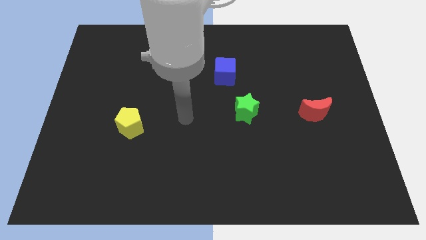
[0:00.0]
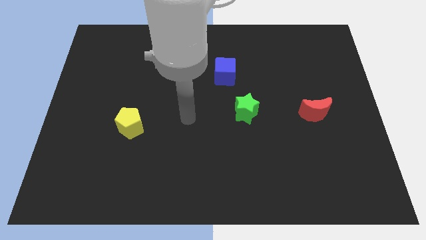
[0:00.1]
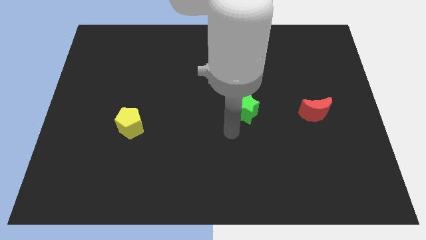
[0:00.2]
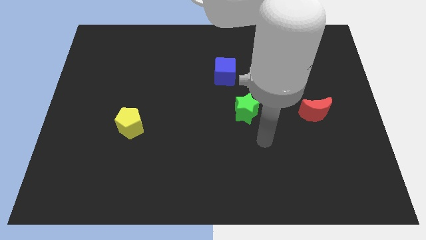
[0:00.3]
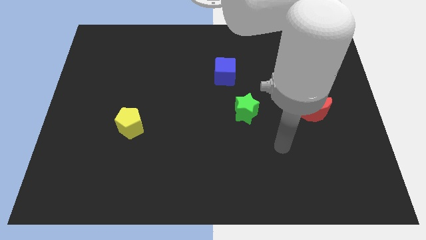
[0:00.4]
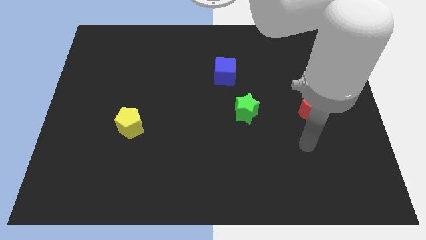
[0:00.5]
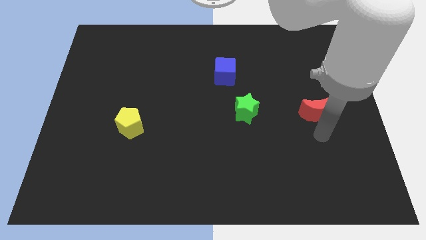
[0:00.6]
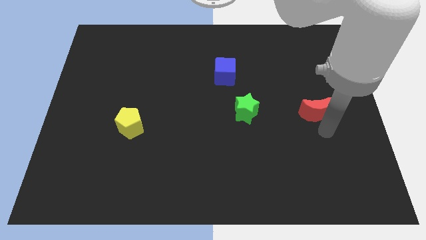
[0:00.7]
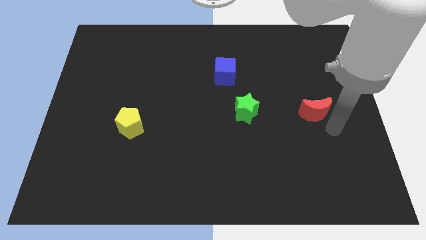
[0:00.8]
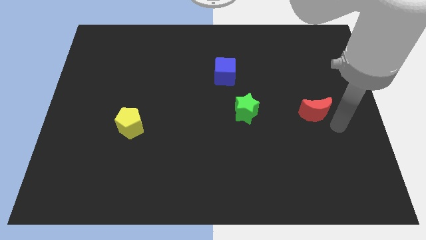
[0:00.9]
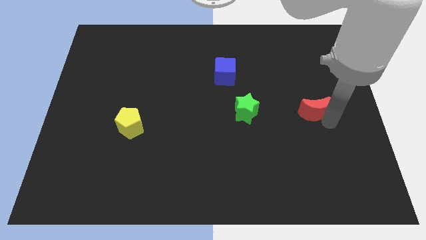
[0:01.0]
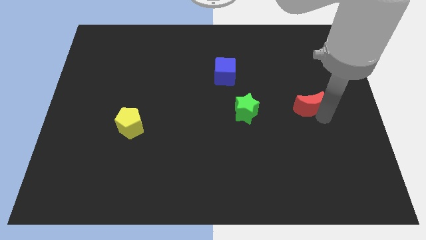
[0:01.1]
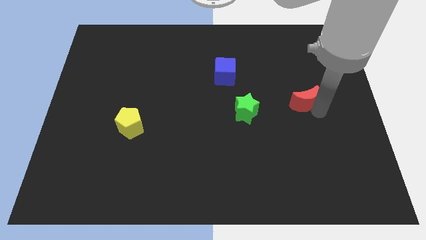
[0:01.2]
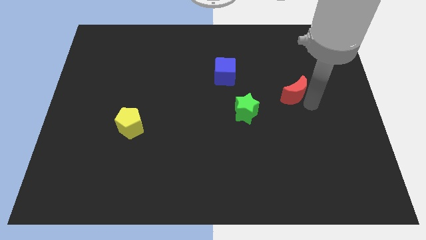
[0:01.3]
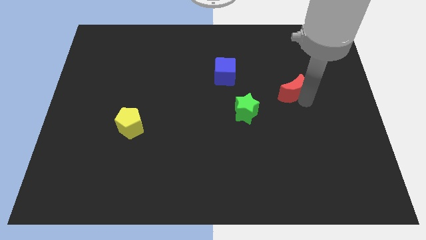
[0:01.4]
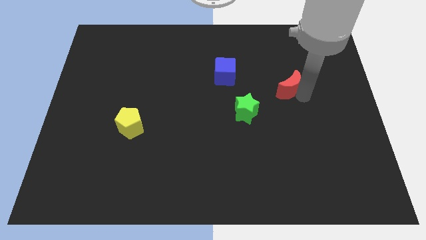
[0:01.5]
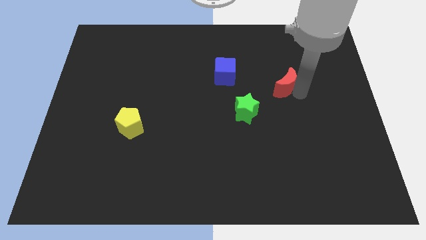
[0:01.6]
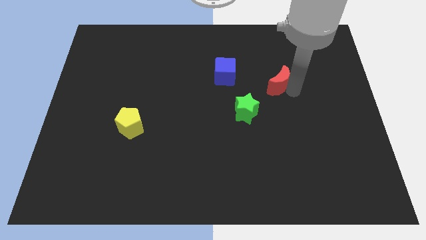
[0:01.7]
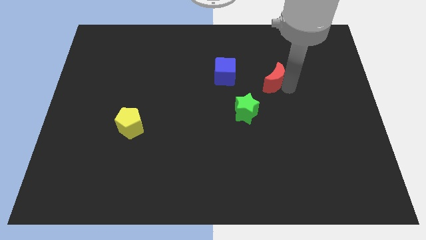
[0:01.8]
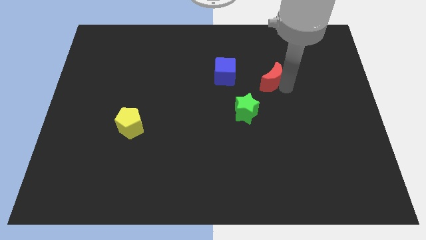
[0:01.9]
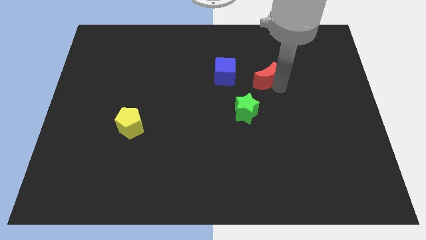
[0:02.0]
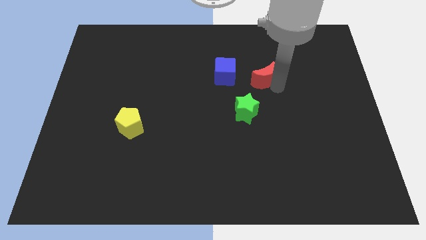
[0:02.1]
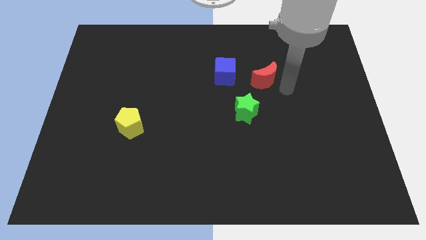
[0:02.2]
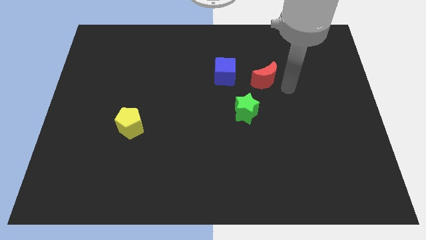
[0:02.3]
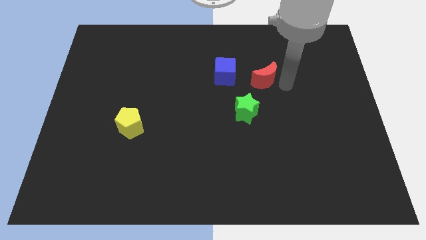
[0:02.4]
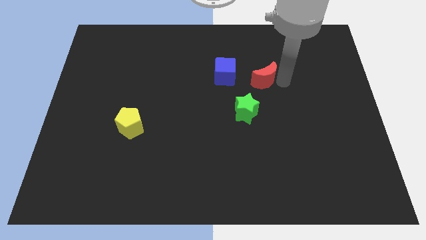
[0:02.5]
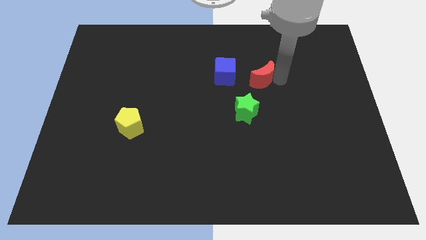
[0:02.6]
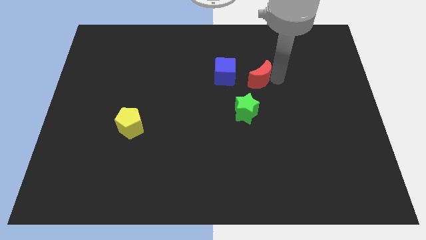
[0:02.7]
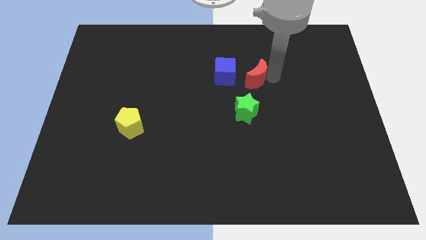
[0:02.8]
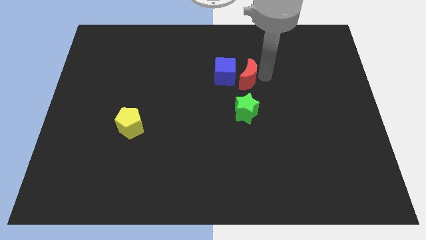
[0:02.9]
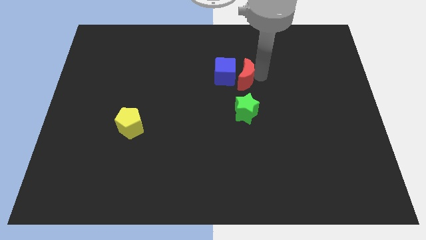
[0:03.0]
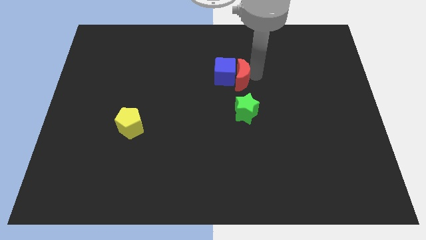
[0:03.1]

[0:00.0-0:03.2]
slide the red moon next to the cube

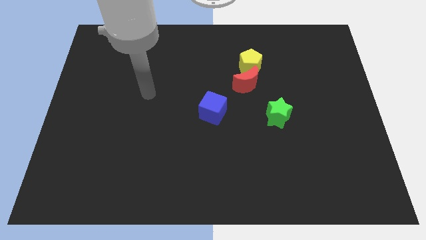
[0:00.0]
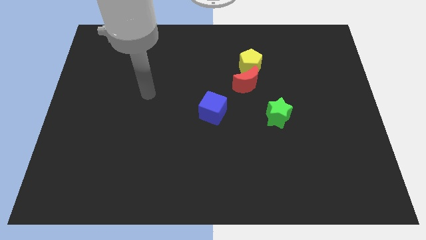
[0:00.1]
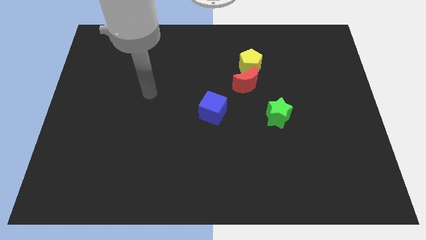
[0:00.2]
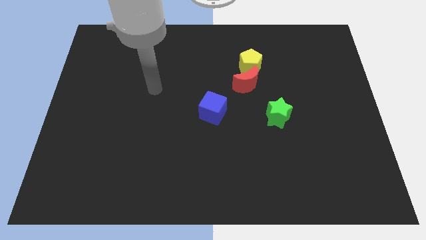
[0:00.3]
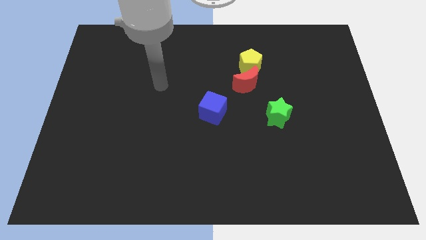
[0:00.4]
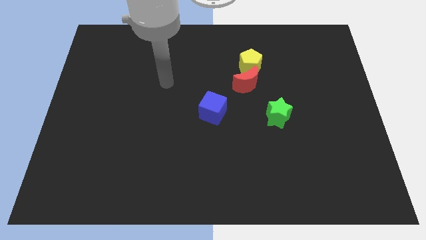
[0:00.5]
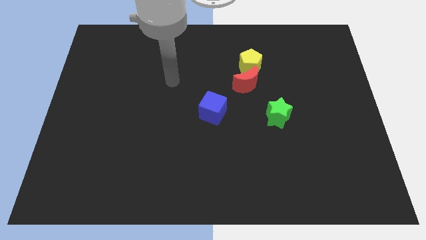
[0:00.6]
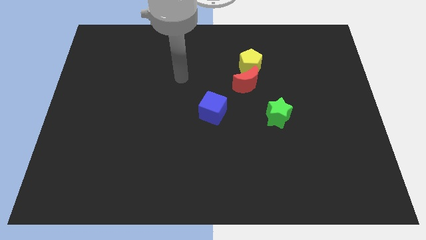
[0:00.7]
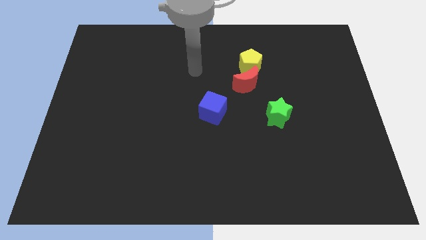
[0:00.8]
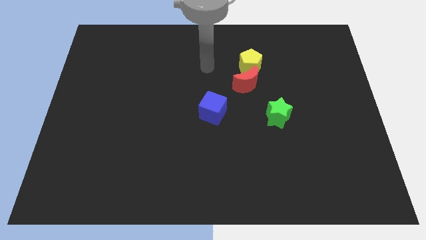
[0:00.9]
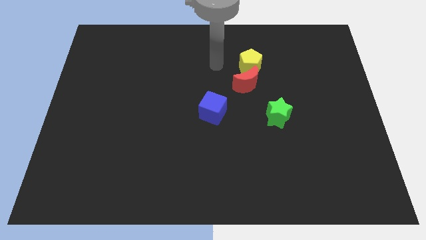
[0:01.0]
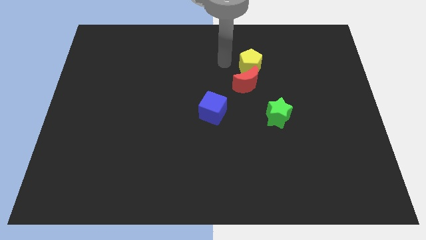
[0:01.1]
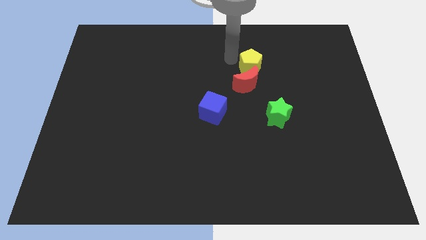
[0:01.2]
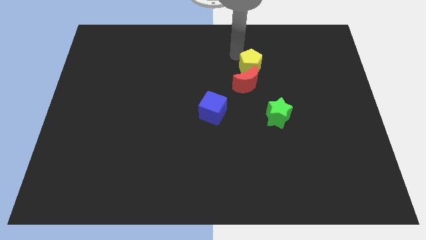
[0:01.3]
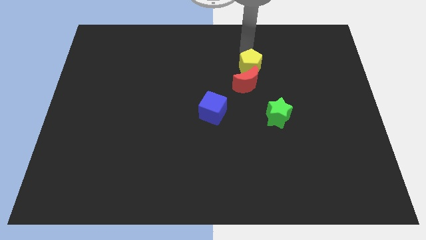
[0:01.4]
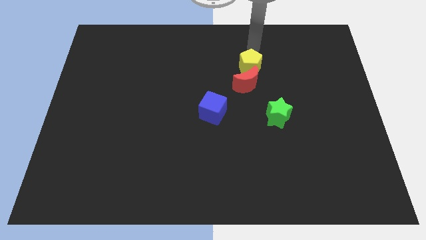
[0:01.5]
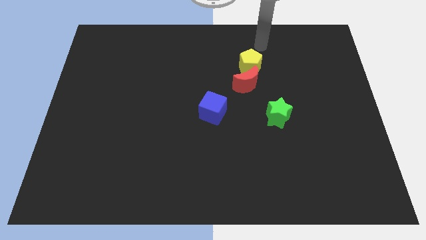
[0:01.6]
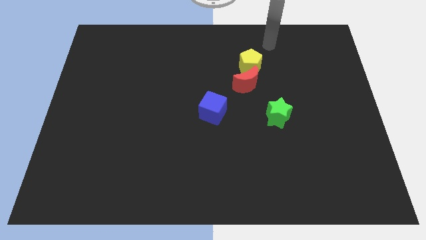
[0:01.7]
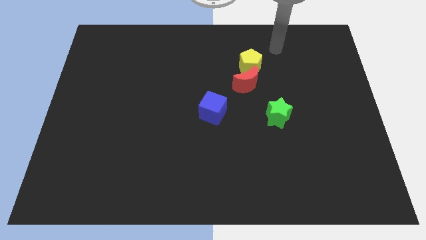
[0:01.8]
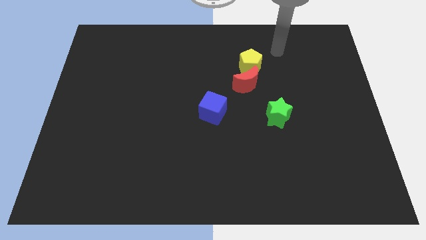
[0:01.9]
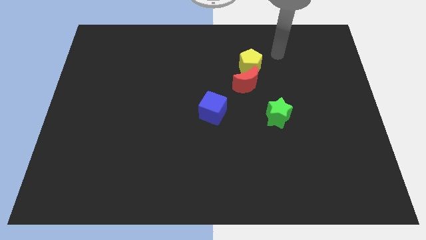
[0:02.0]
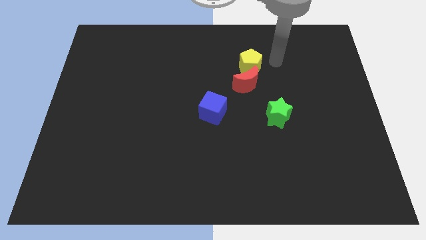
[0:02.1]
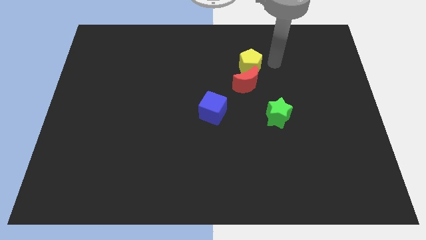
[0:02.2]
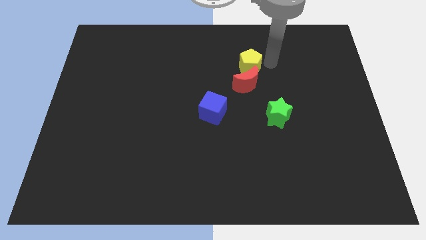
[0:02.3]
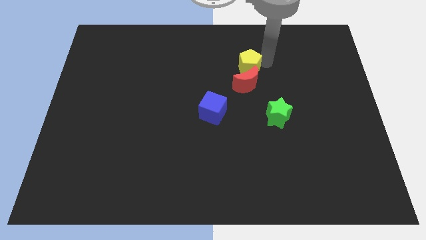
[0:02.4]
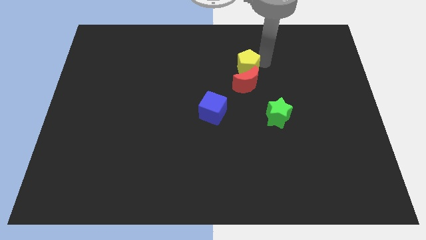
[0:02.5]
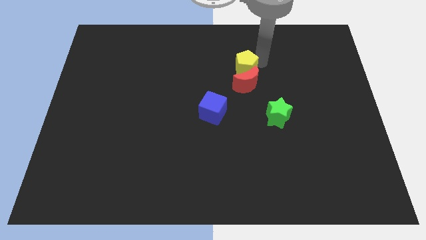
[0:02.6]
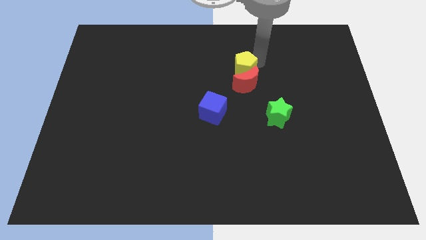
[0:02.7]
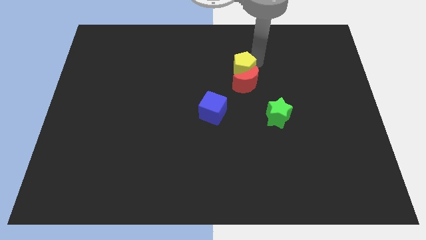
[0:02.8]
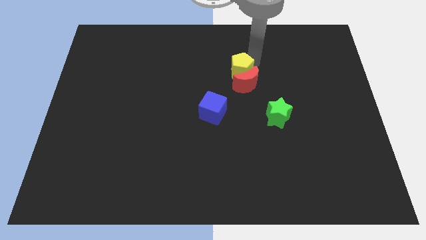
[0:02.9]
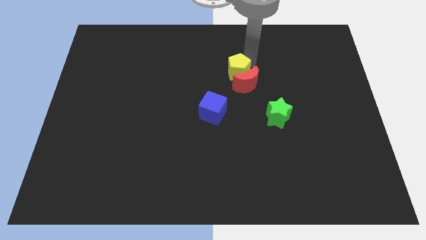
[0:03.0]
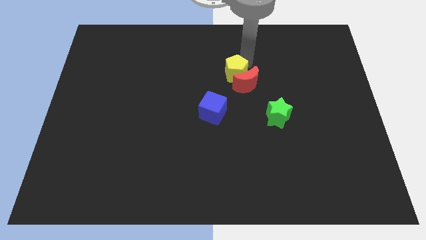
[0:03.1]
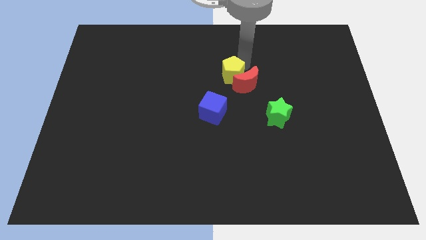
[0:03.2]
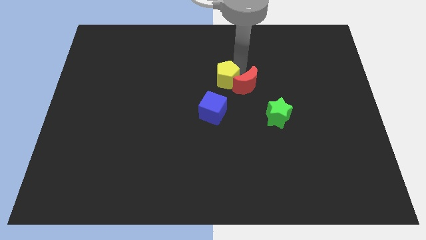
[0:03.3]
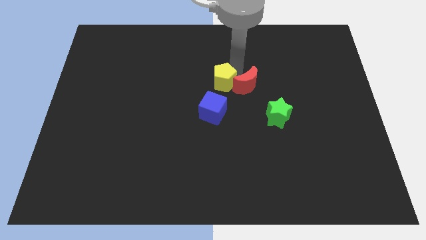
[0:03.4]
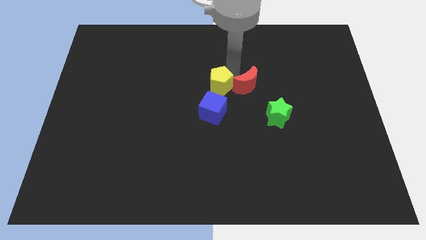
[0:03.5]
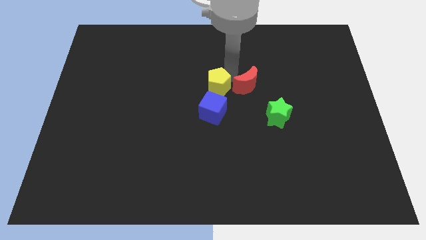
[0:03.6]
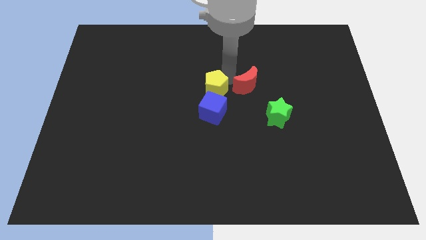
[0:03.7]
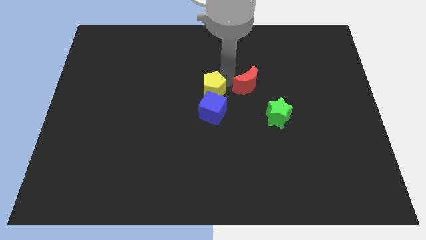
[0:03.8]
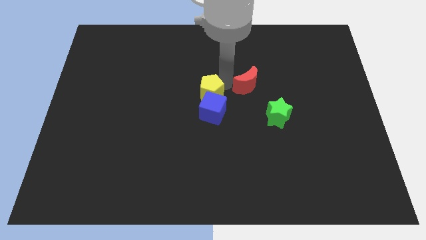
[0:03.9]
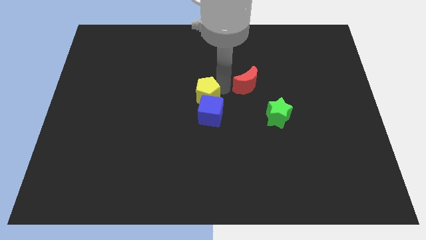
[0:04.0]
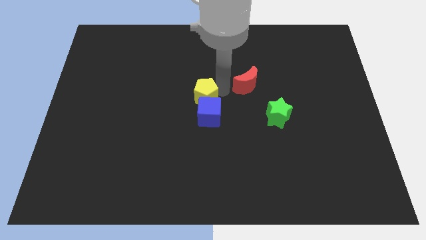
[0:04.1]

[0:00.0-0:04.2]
push the yellow pentagon towards the blue cube

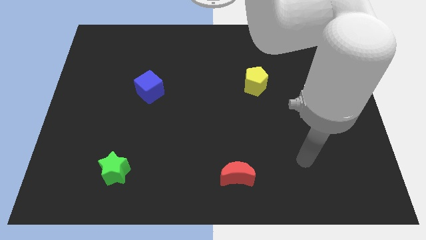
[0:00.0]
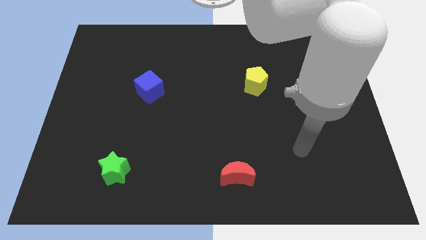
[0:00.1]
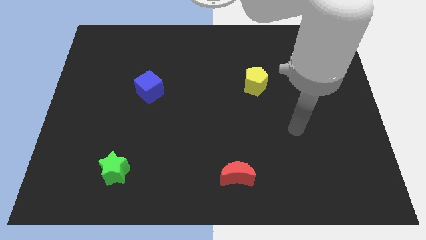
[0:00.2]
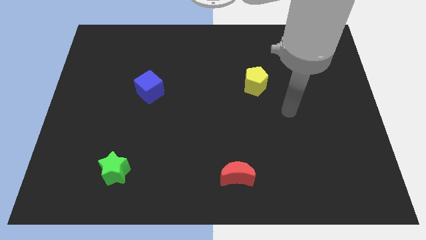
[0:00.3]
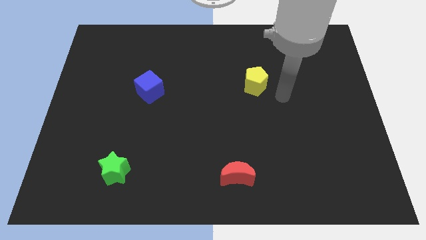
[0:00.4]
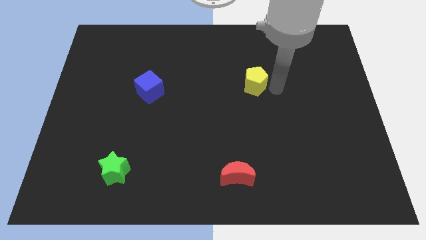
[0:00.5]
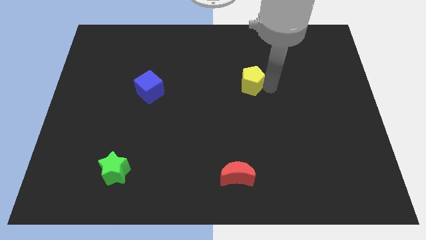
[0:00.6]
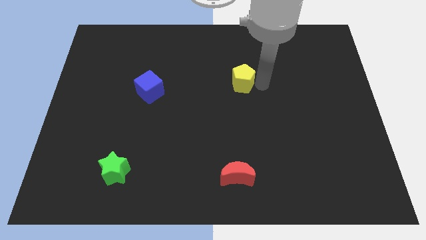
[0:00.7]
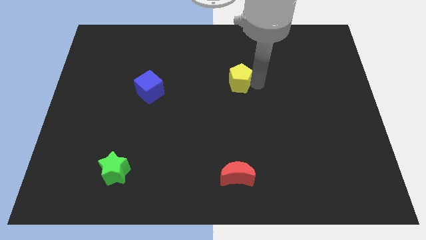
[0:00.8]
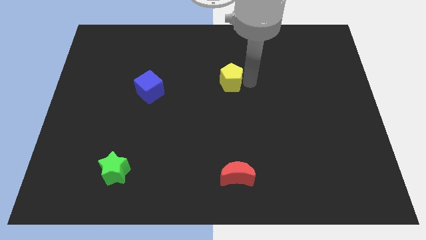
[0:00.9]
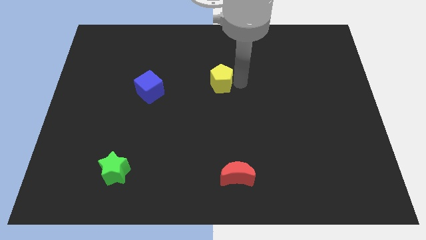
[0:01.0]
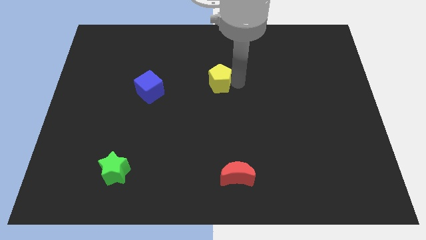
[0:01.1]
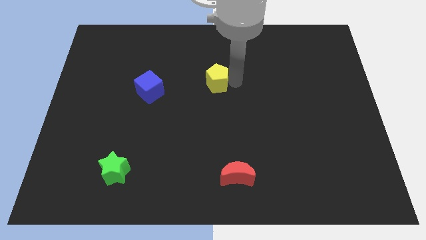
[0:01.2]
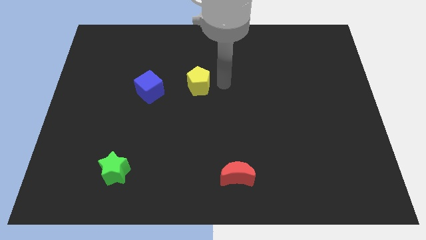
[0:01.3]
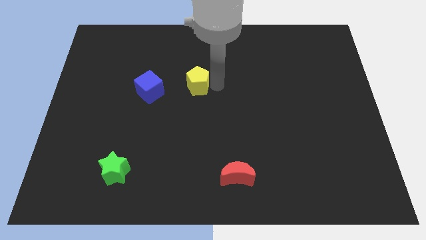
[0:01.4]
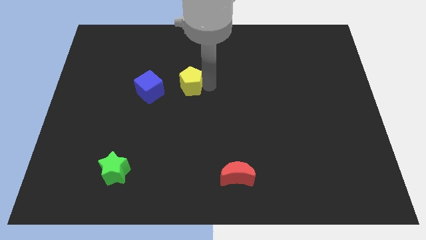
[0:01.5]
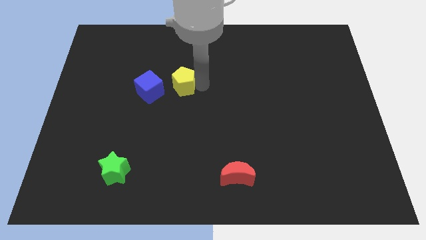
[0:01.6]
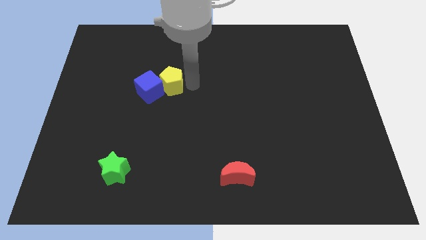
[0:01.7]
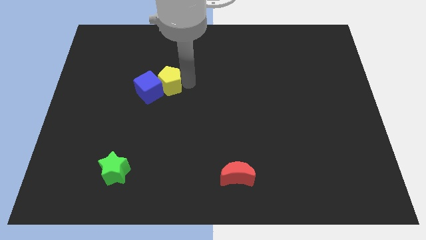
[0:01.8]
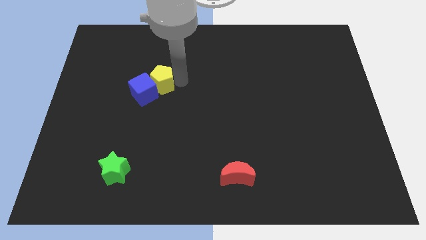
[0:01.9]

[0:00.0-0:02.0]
slide the yellow block next to the blue cube
